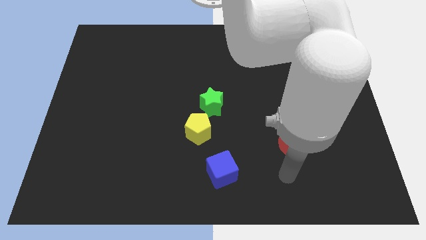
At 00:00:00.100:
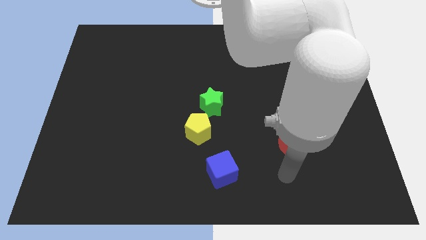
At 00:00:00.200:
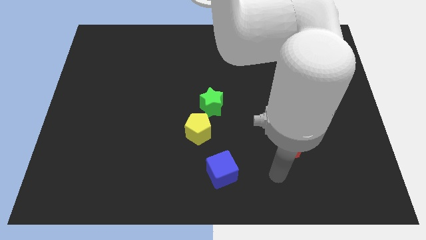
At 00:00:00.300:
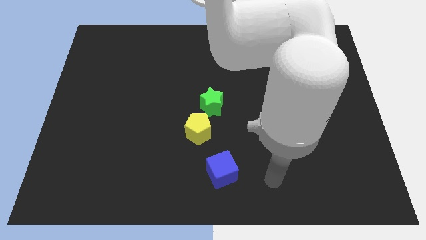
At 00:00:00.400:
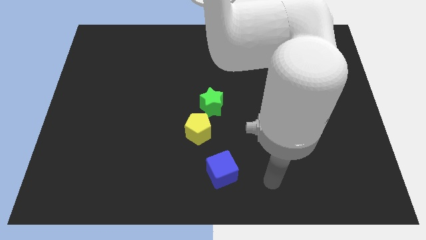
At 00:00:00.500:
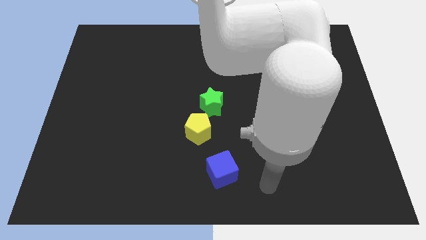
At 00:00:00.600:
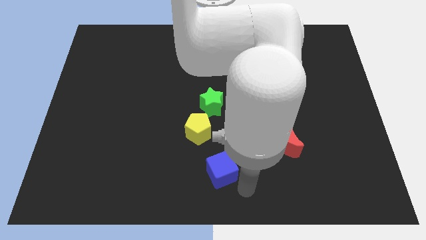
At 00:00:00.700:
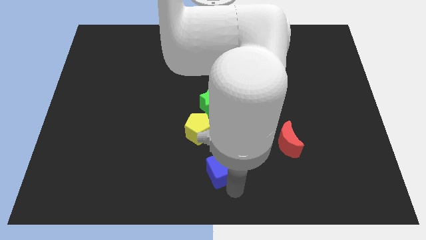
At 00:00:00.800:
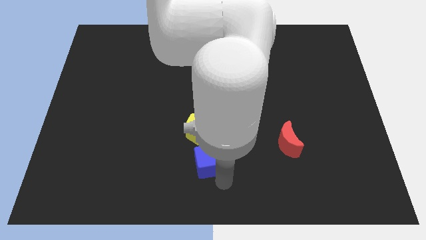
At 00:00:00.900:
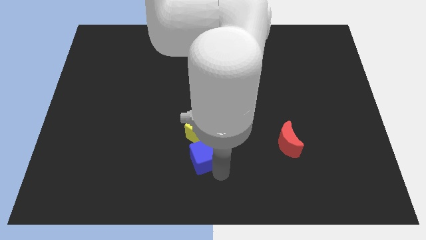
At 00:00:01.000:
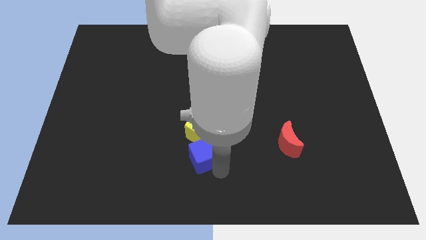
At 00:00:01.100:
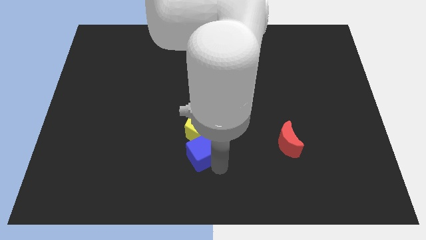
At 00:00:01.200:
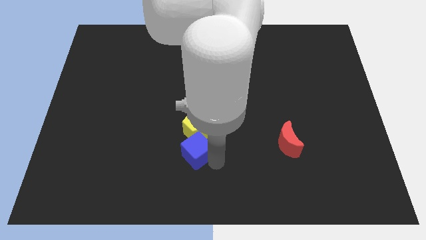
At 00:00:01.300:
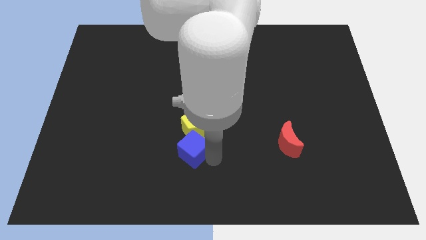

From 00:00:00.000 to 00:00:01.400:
slide the cube close to the yellow block

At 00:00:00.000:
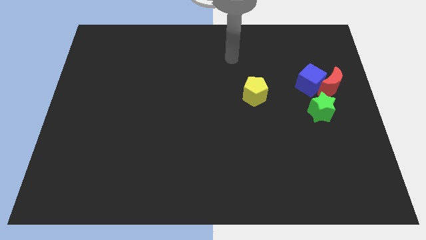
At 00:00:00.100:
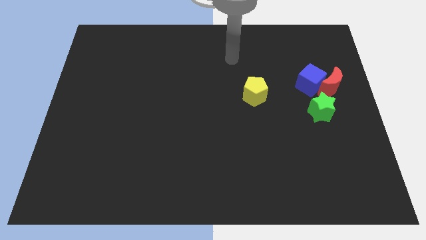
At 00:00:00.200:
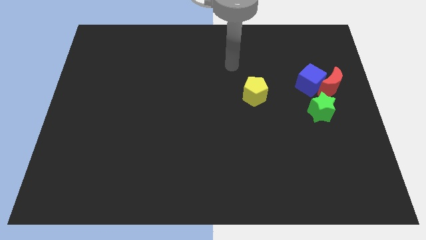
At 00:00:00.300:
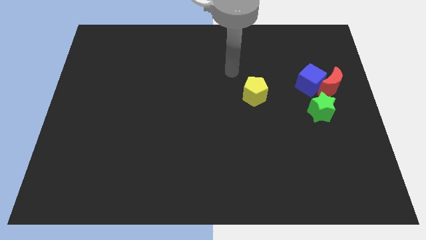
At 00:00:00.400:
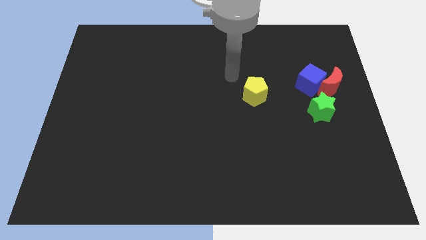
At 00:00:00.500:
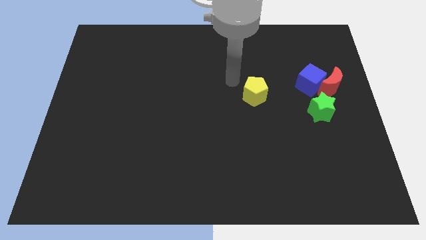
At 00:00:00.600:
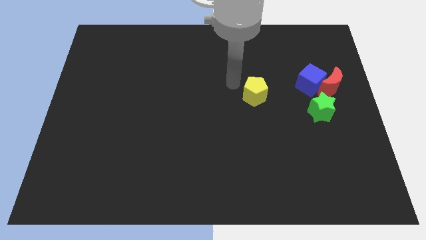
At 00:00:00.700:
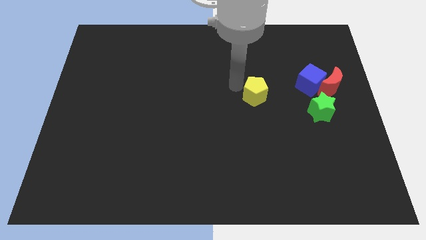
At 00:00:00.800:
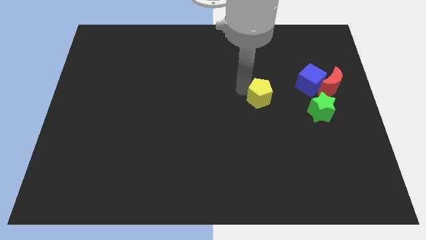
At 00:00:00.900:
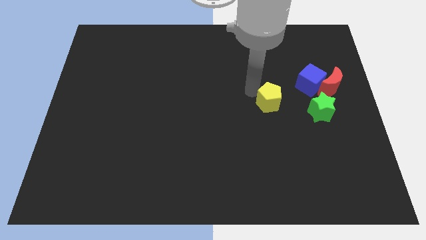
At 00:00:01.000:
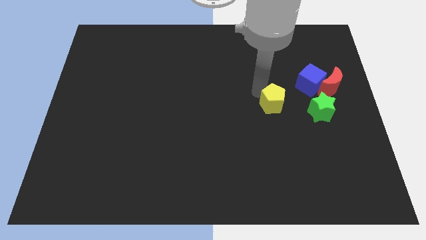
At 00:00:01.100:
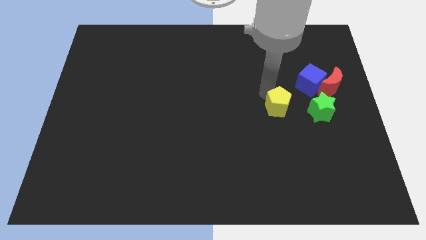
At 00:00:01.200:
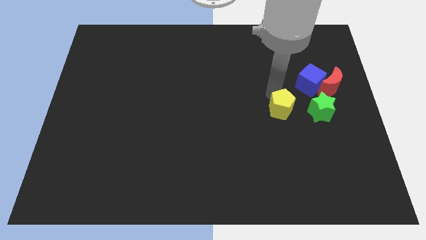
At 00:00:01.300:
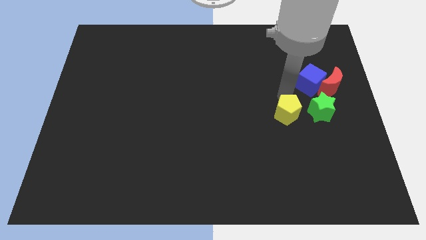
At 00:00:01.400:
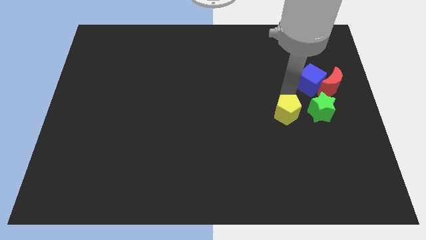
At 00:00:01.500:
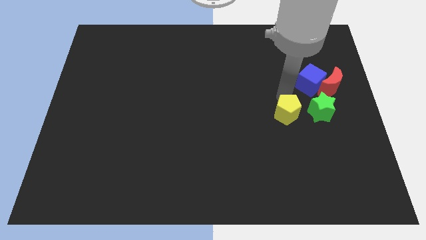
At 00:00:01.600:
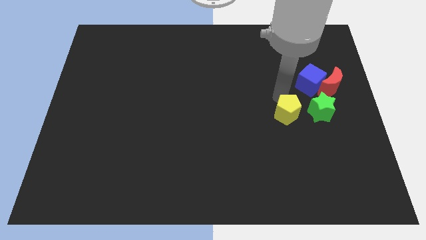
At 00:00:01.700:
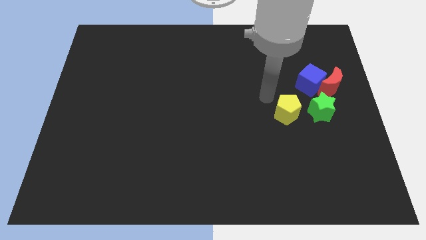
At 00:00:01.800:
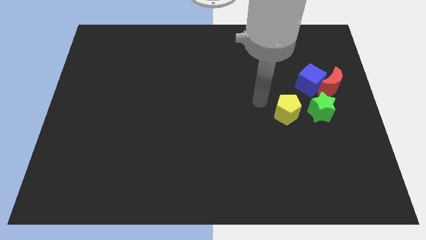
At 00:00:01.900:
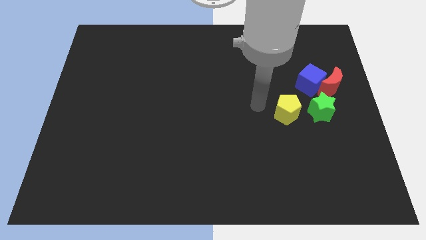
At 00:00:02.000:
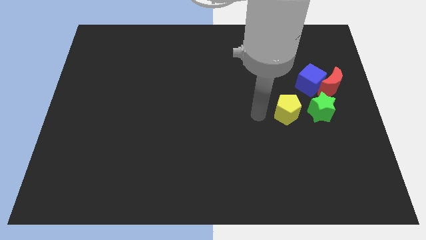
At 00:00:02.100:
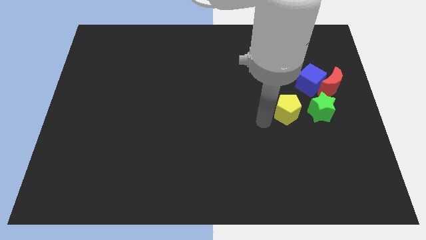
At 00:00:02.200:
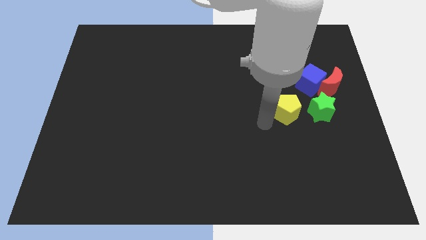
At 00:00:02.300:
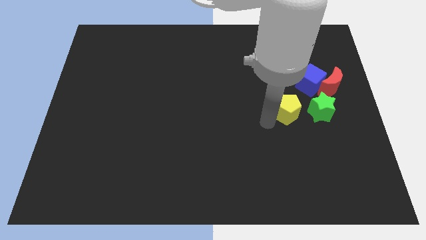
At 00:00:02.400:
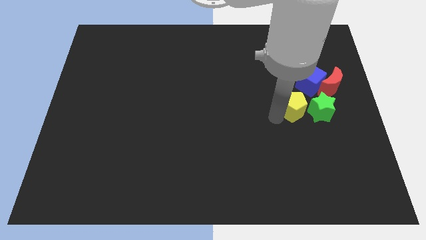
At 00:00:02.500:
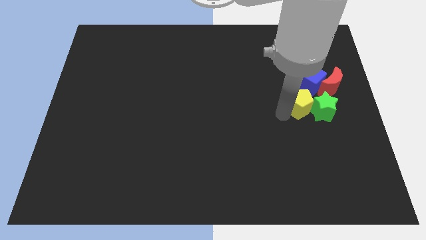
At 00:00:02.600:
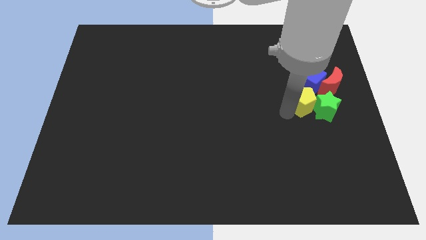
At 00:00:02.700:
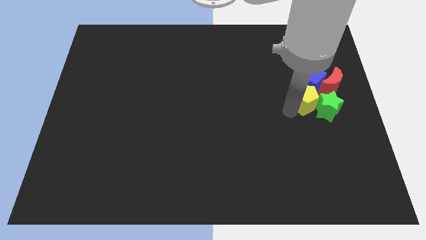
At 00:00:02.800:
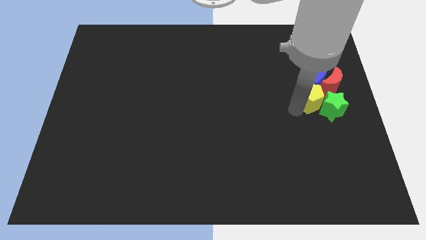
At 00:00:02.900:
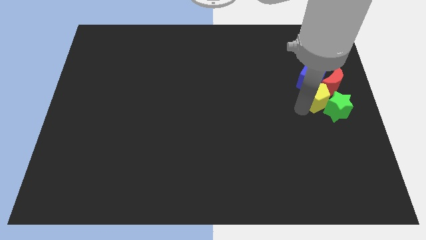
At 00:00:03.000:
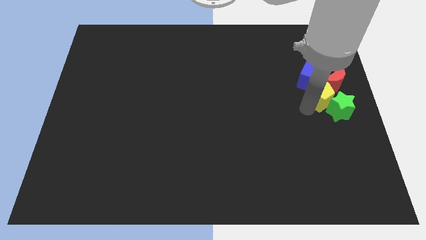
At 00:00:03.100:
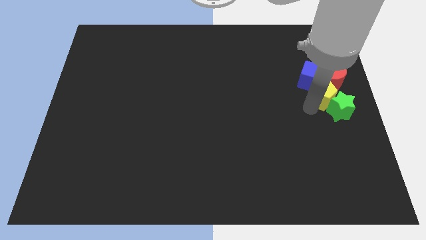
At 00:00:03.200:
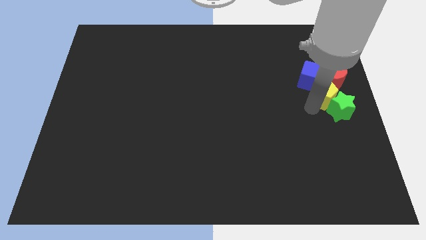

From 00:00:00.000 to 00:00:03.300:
put the yellow block close to the red moon

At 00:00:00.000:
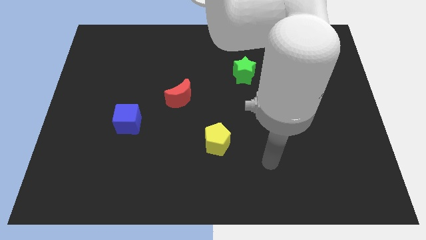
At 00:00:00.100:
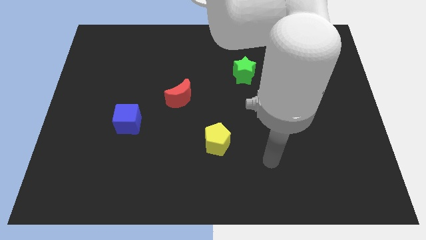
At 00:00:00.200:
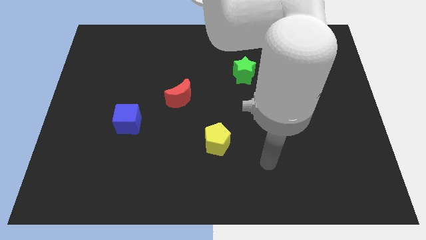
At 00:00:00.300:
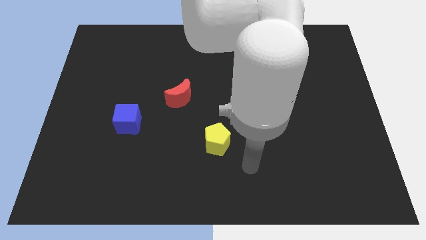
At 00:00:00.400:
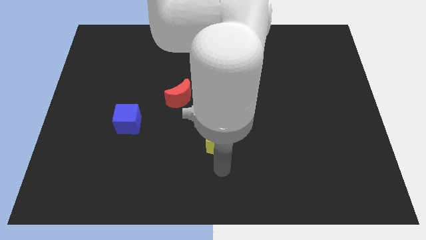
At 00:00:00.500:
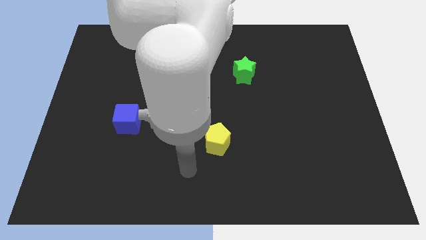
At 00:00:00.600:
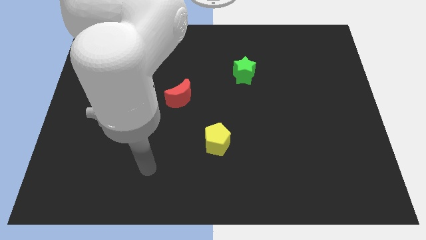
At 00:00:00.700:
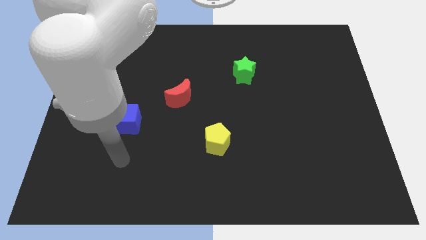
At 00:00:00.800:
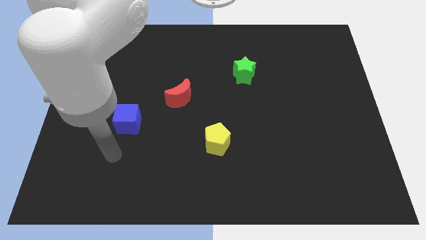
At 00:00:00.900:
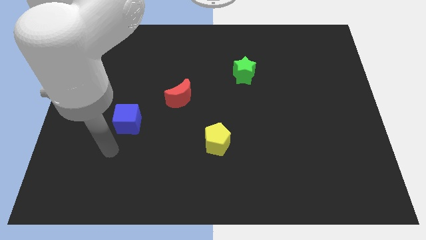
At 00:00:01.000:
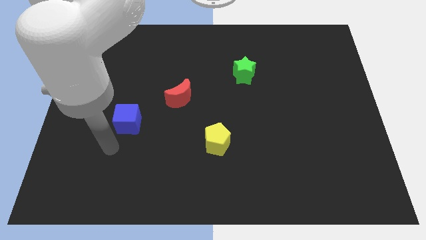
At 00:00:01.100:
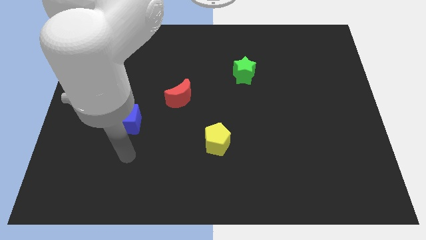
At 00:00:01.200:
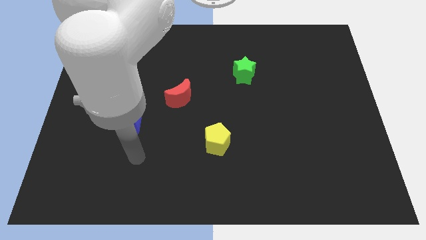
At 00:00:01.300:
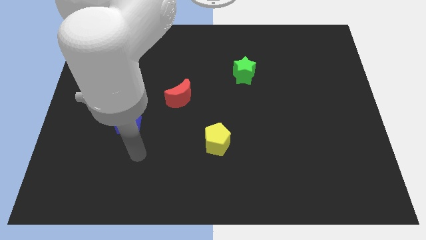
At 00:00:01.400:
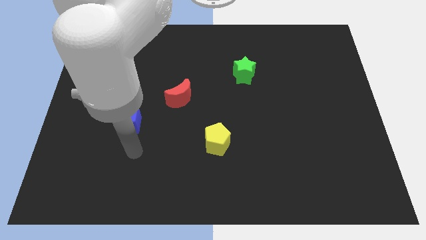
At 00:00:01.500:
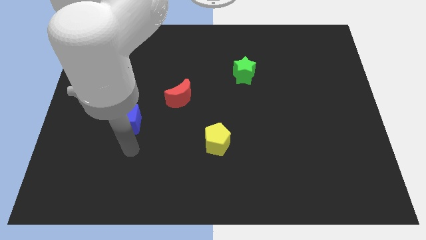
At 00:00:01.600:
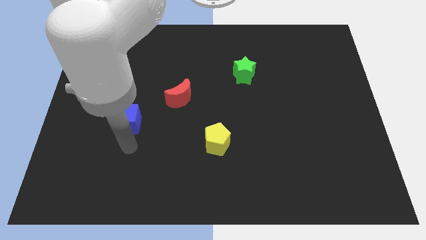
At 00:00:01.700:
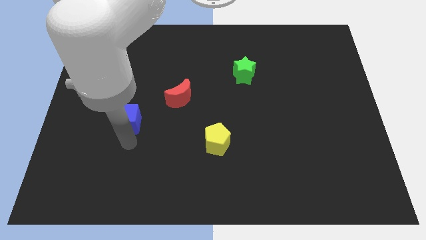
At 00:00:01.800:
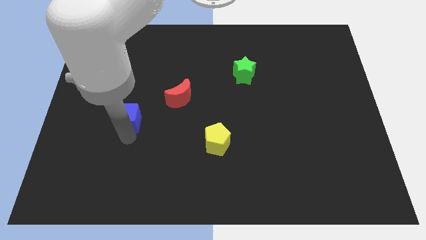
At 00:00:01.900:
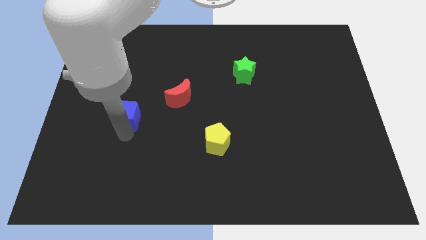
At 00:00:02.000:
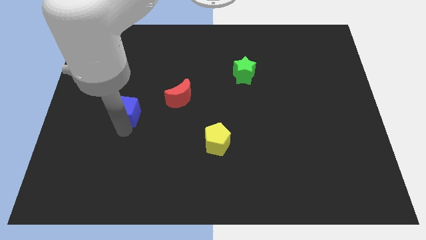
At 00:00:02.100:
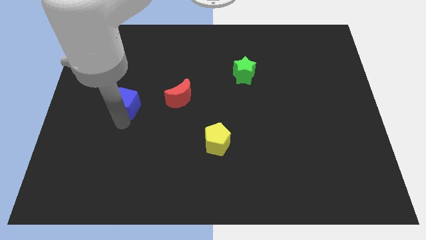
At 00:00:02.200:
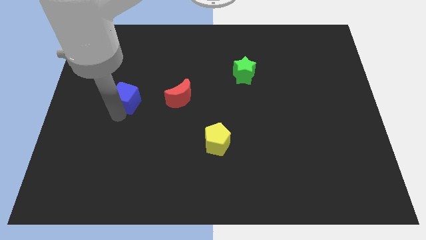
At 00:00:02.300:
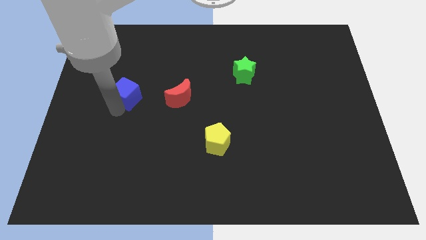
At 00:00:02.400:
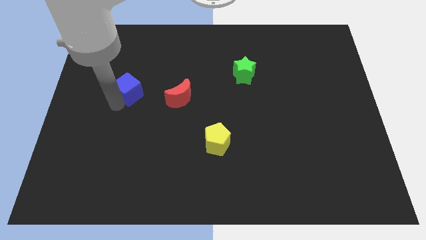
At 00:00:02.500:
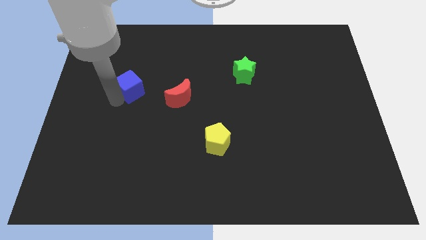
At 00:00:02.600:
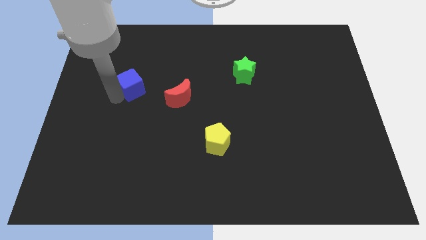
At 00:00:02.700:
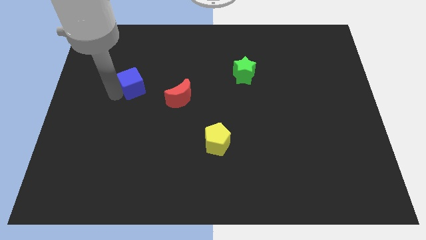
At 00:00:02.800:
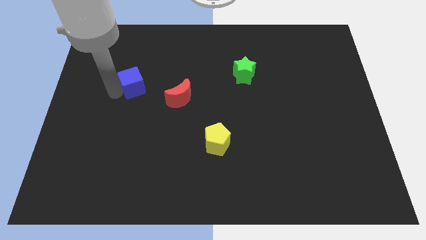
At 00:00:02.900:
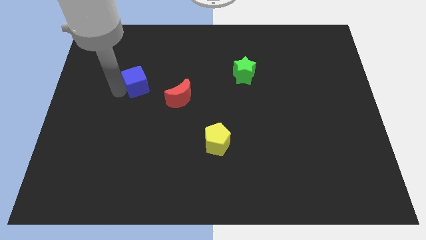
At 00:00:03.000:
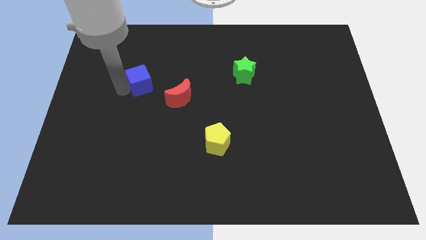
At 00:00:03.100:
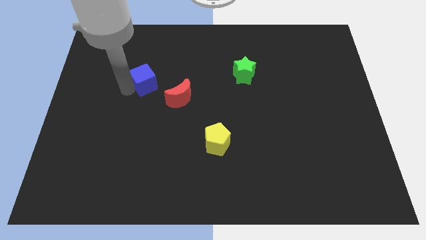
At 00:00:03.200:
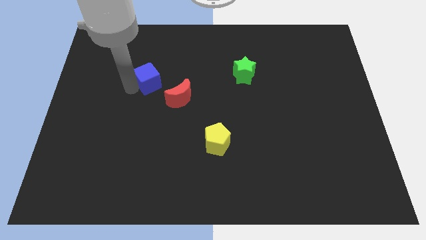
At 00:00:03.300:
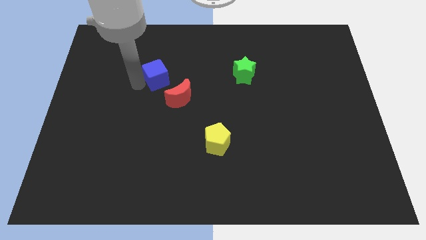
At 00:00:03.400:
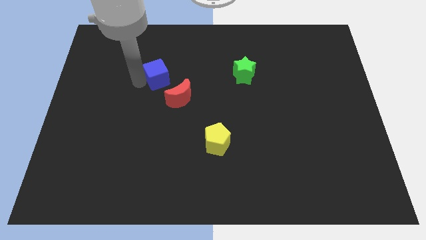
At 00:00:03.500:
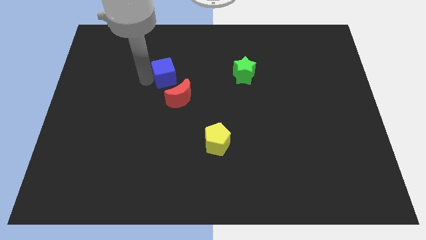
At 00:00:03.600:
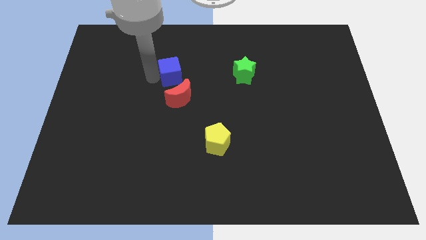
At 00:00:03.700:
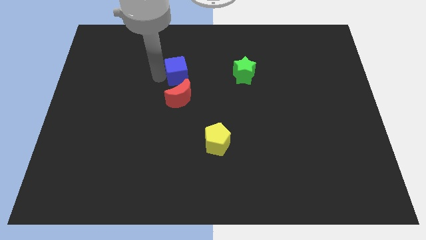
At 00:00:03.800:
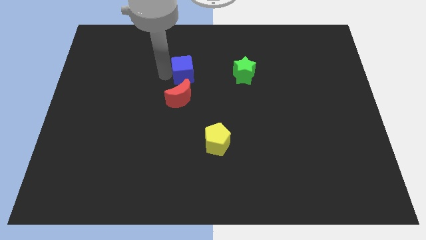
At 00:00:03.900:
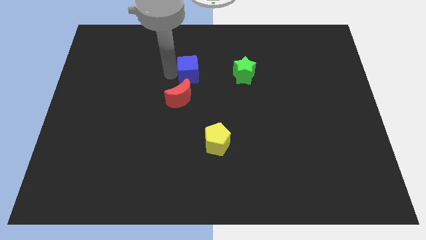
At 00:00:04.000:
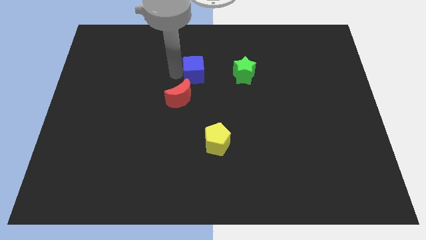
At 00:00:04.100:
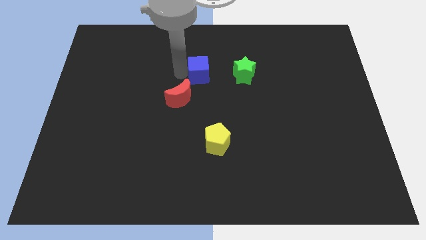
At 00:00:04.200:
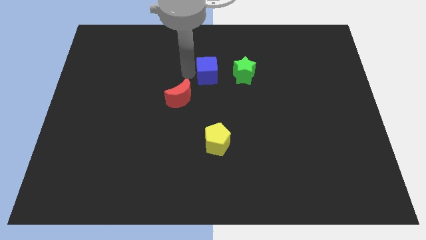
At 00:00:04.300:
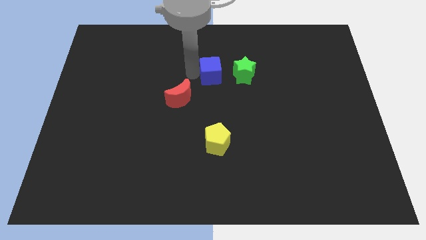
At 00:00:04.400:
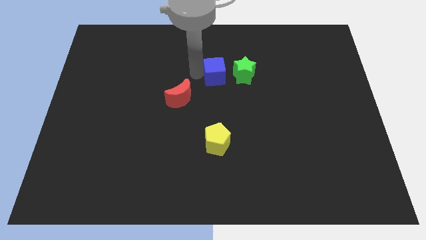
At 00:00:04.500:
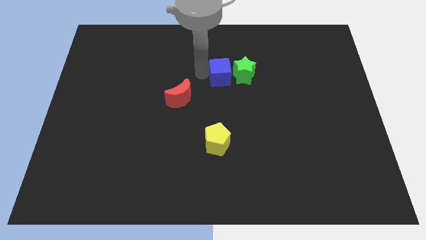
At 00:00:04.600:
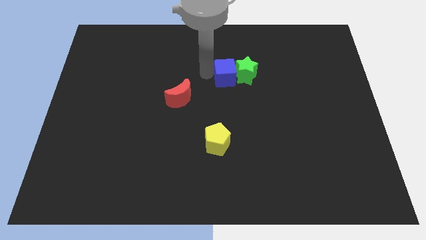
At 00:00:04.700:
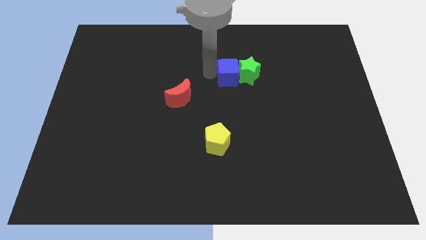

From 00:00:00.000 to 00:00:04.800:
put the blue cube to the green star
